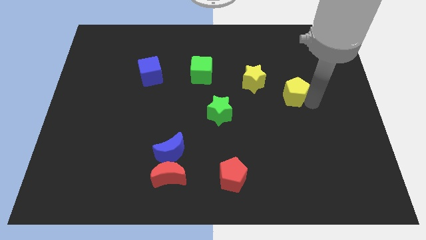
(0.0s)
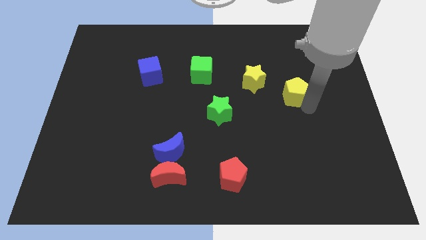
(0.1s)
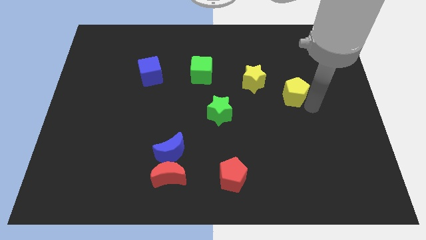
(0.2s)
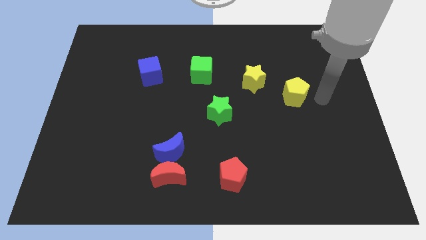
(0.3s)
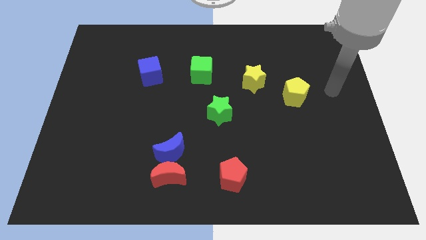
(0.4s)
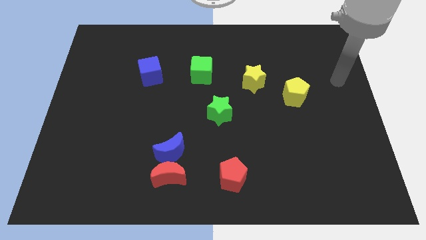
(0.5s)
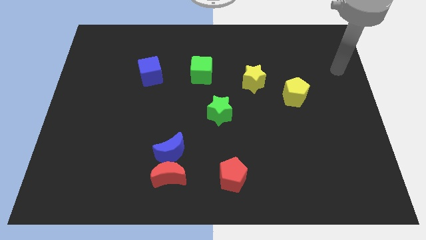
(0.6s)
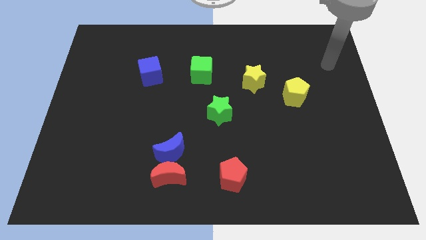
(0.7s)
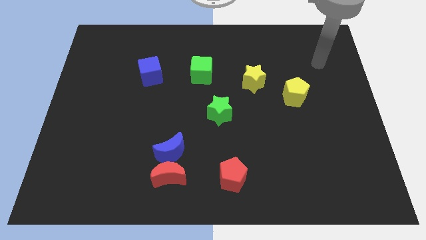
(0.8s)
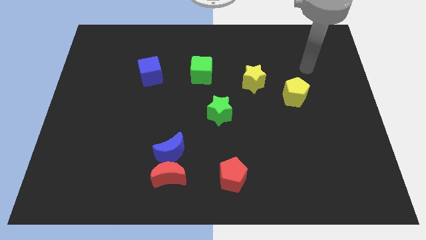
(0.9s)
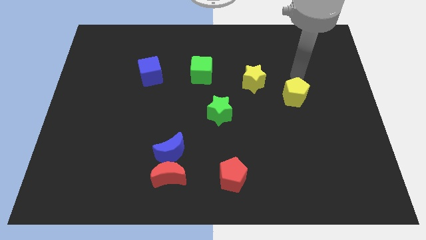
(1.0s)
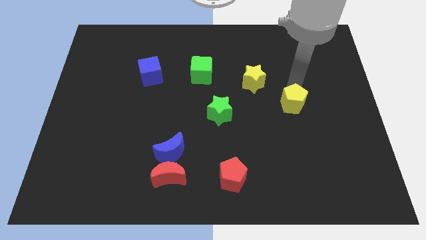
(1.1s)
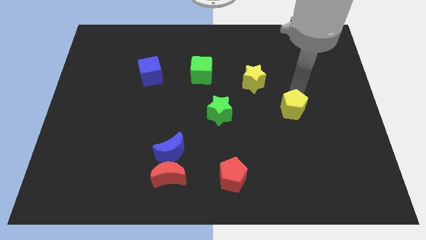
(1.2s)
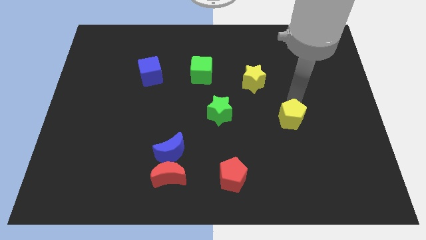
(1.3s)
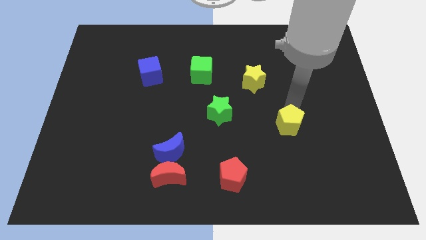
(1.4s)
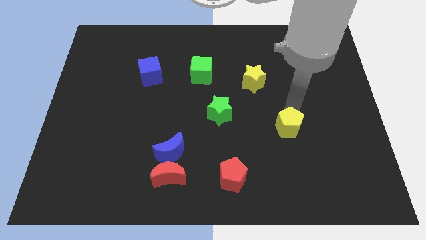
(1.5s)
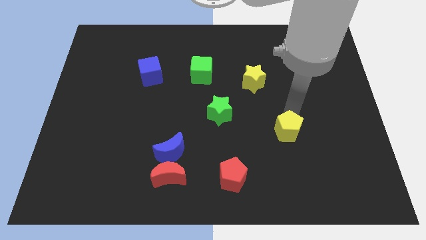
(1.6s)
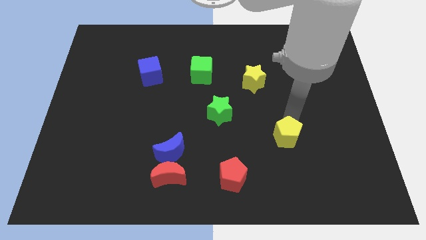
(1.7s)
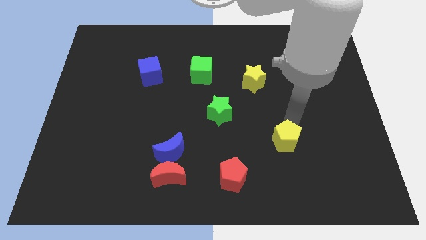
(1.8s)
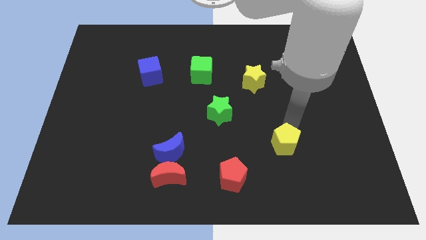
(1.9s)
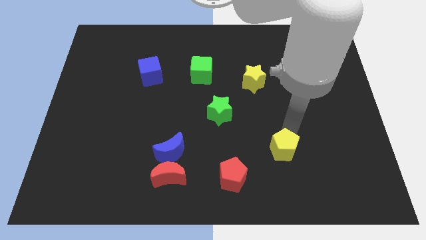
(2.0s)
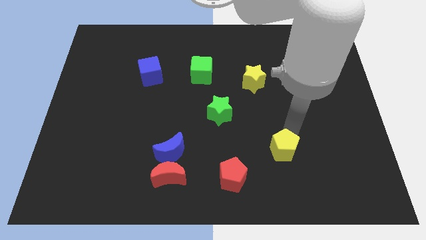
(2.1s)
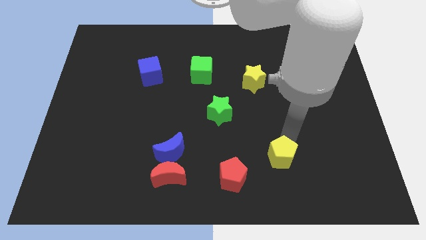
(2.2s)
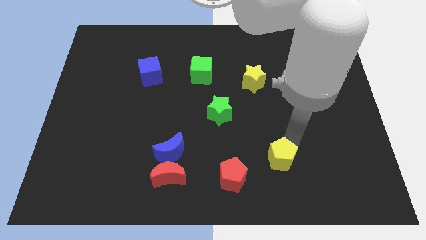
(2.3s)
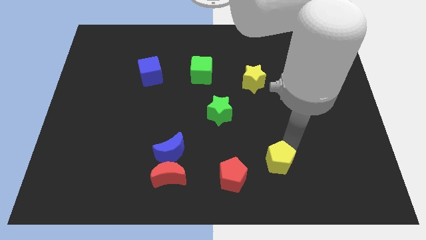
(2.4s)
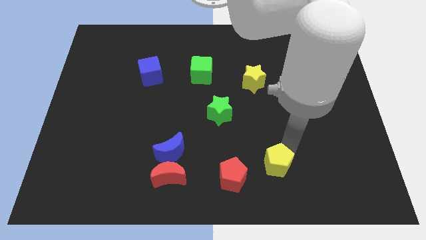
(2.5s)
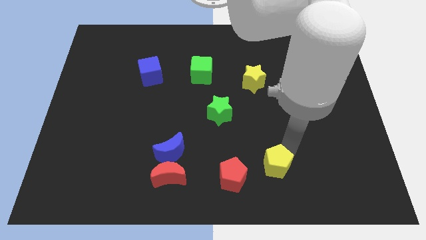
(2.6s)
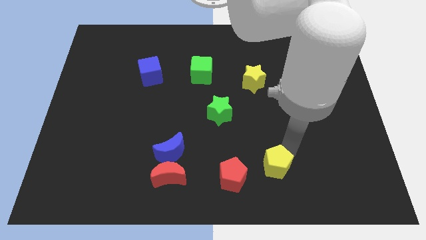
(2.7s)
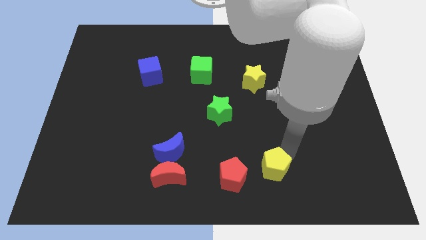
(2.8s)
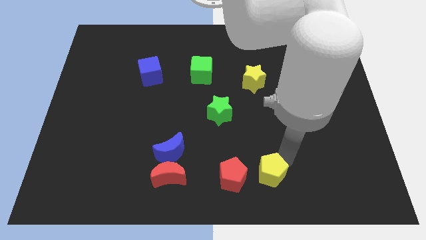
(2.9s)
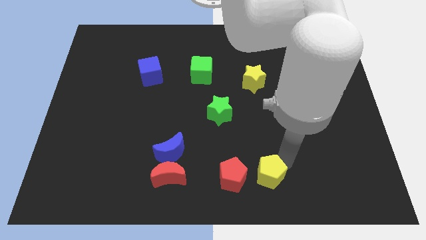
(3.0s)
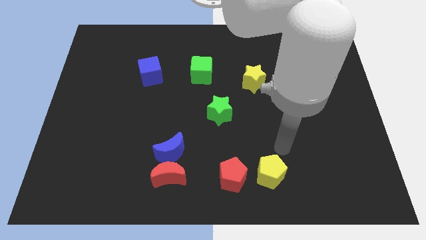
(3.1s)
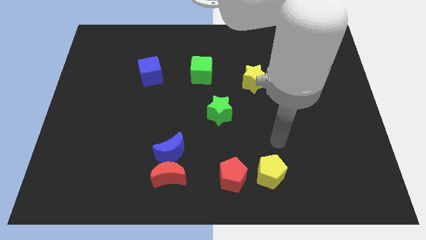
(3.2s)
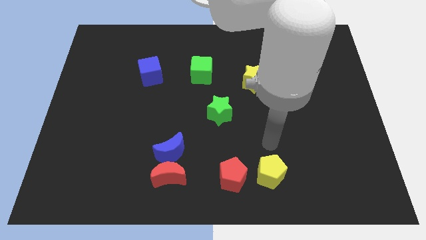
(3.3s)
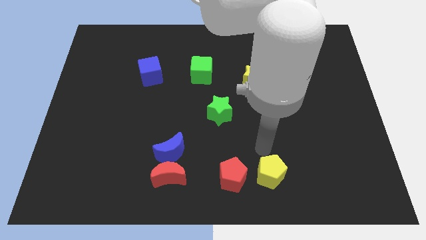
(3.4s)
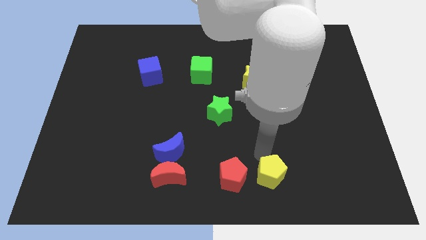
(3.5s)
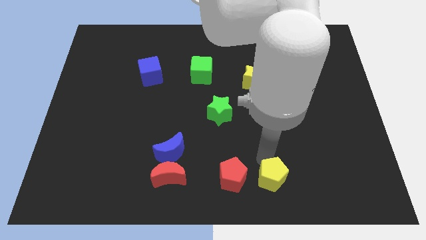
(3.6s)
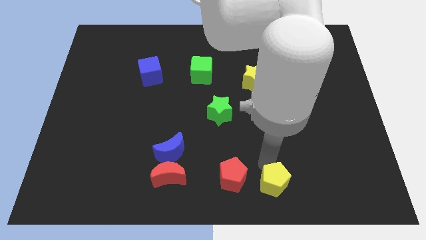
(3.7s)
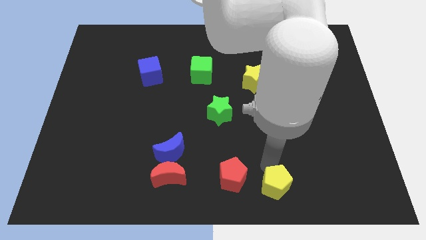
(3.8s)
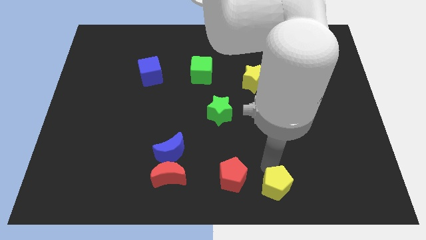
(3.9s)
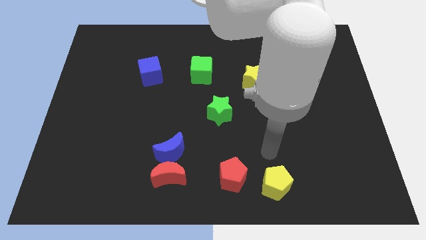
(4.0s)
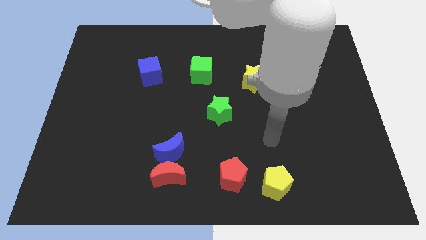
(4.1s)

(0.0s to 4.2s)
place yellow pentagon to the right of red pentagon

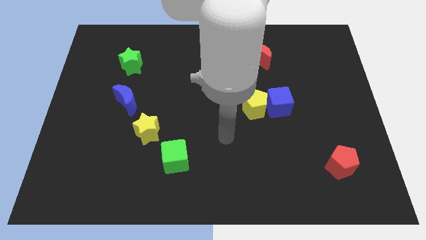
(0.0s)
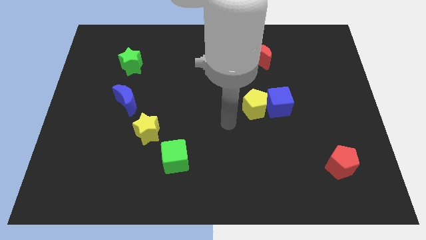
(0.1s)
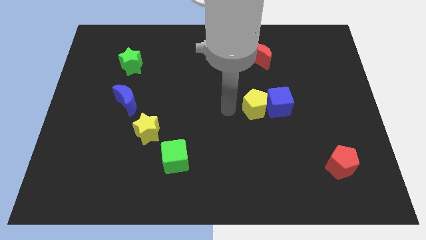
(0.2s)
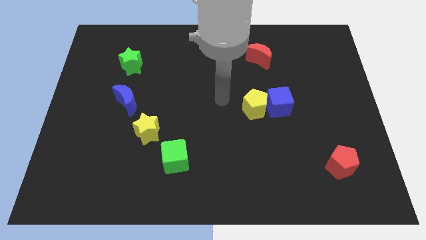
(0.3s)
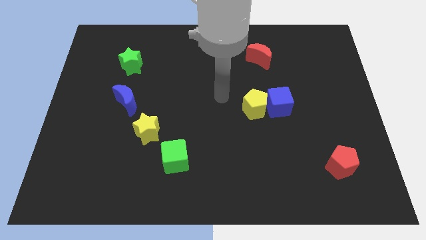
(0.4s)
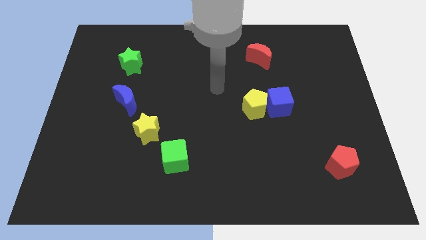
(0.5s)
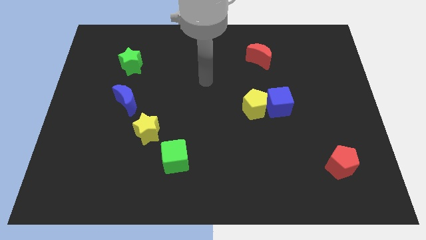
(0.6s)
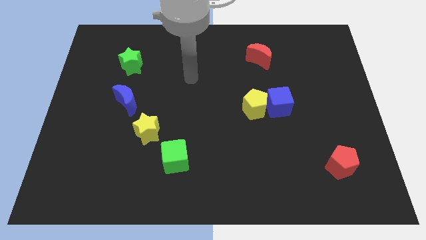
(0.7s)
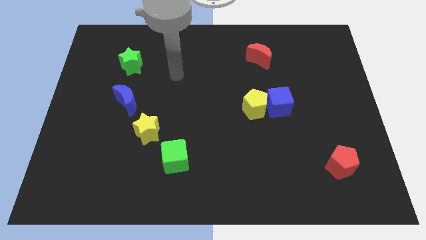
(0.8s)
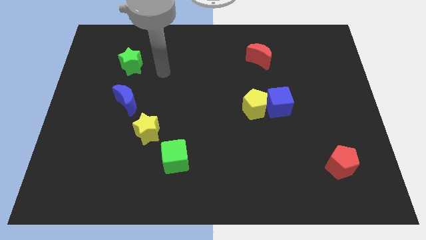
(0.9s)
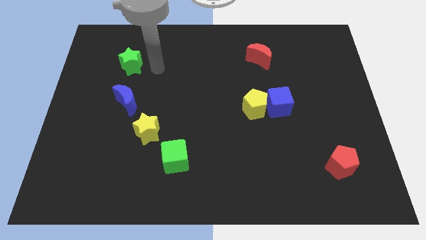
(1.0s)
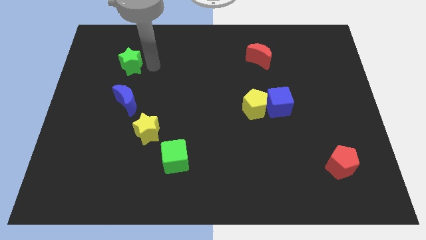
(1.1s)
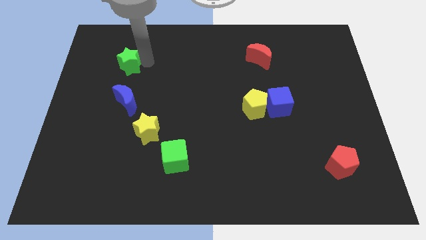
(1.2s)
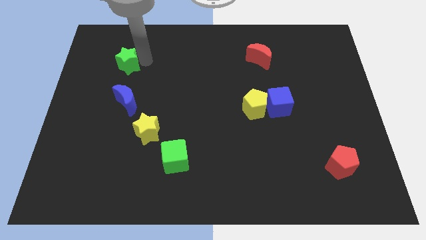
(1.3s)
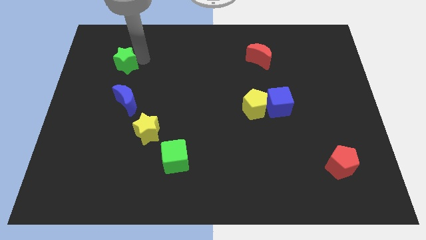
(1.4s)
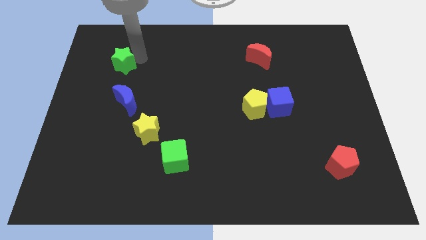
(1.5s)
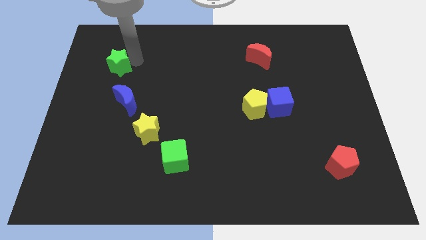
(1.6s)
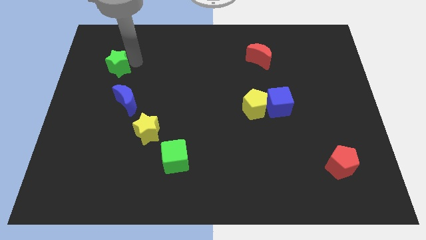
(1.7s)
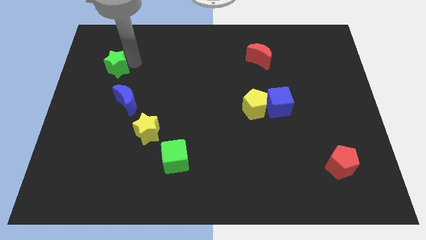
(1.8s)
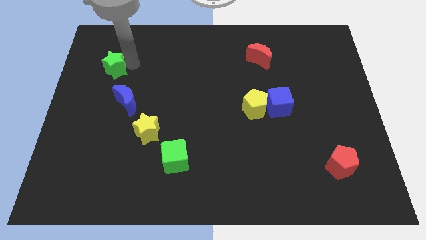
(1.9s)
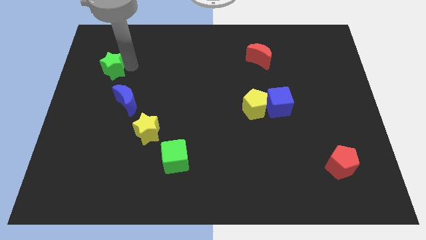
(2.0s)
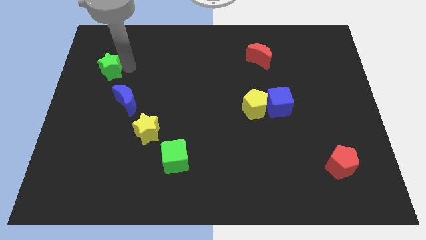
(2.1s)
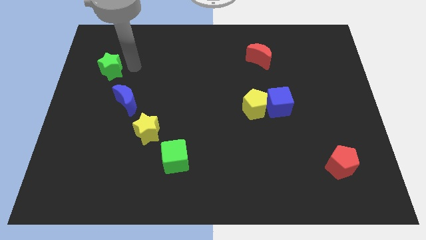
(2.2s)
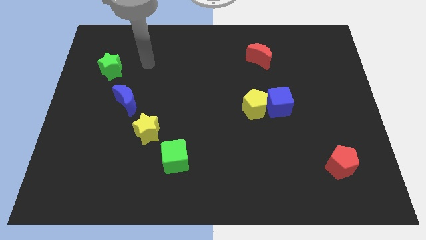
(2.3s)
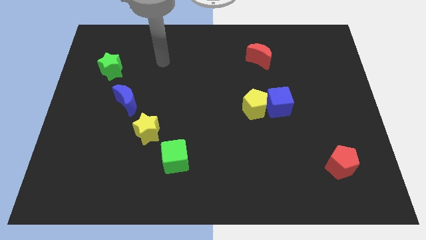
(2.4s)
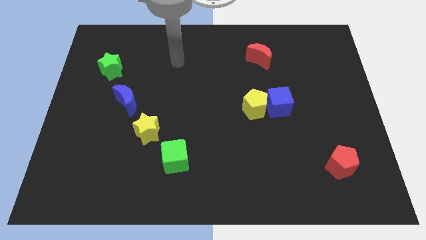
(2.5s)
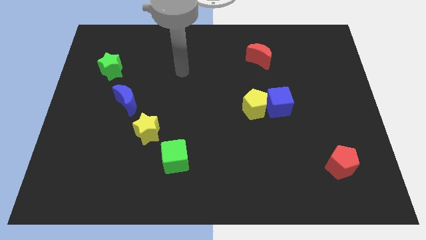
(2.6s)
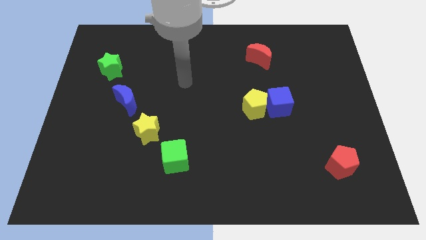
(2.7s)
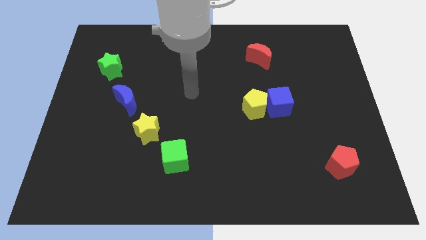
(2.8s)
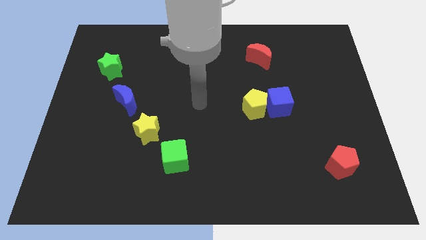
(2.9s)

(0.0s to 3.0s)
slightly move the green star to the top left of blue moon to make a diagonal line

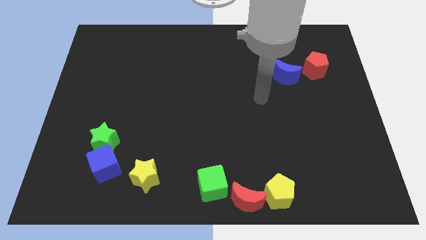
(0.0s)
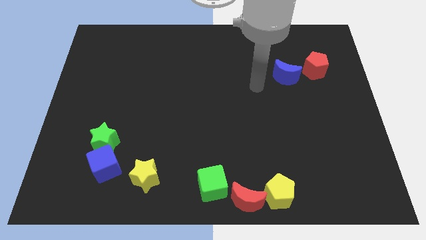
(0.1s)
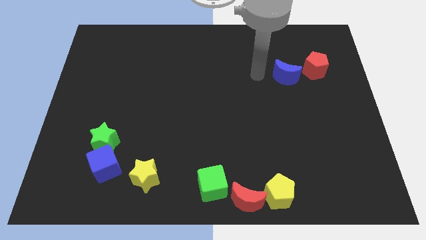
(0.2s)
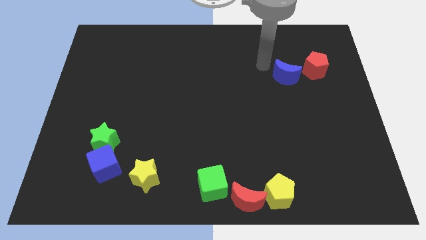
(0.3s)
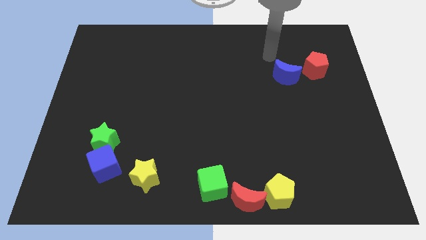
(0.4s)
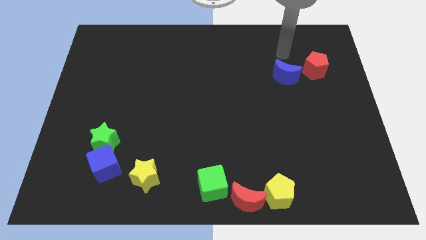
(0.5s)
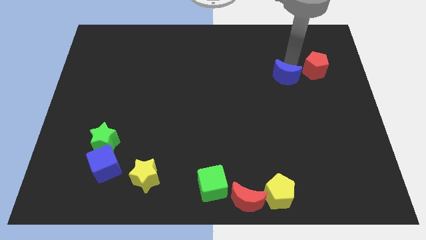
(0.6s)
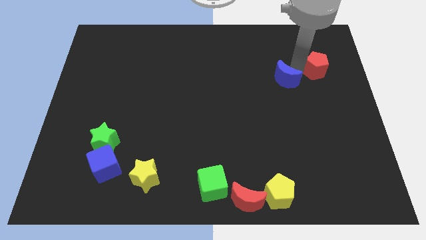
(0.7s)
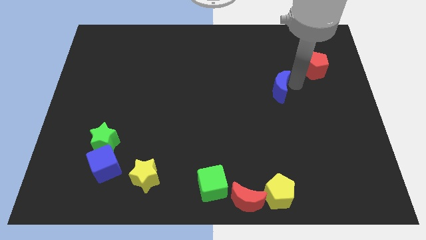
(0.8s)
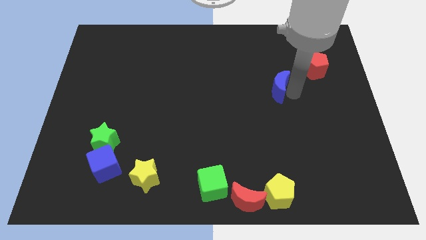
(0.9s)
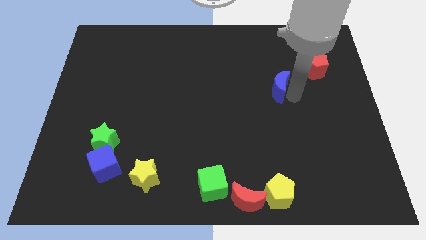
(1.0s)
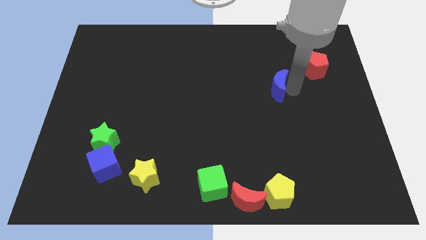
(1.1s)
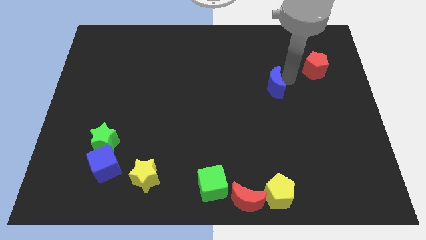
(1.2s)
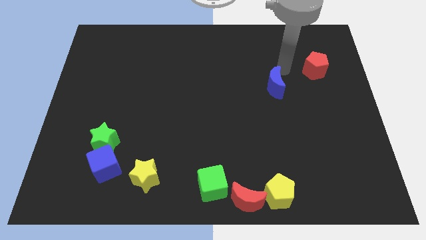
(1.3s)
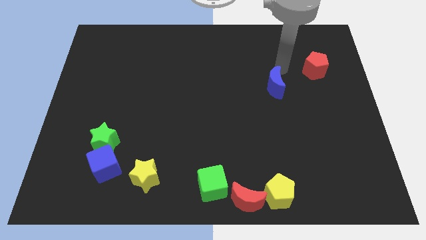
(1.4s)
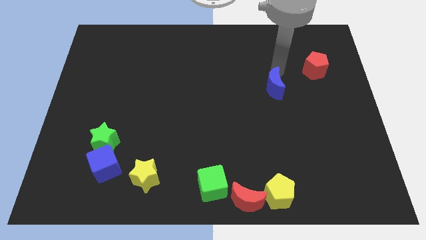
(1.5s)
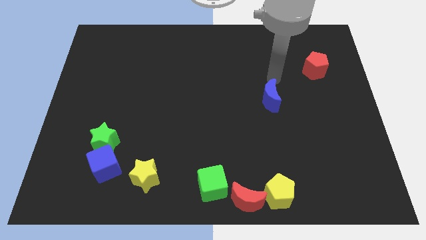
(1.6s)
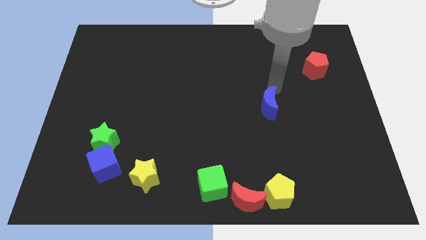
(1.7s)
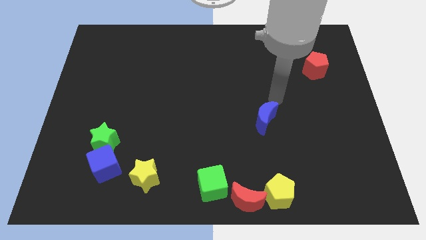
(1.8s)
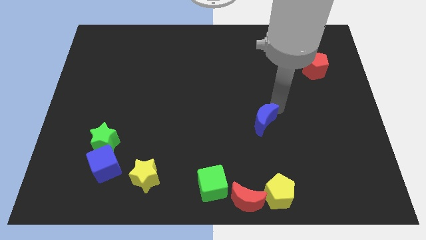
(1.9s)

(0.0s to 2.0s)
separate blue moon from red pentagon
